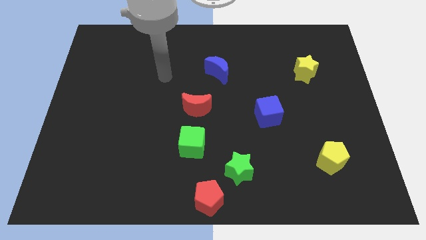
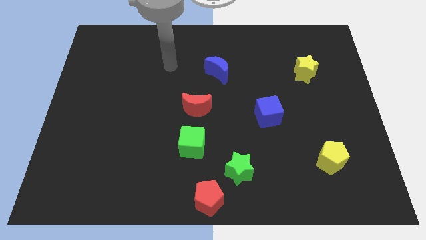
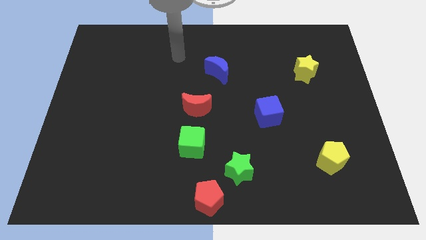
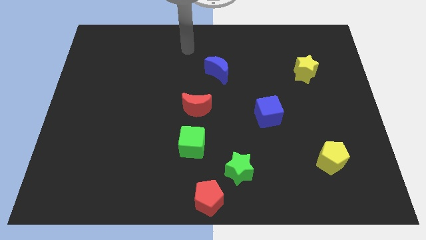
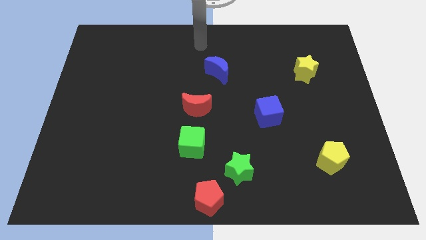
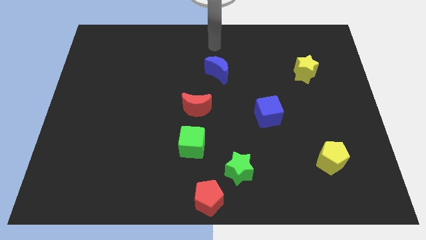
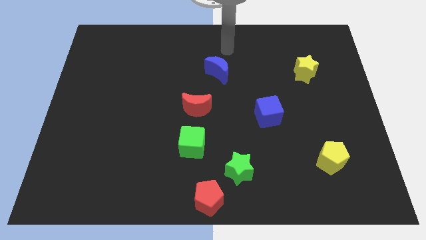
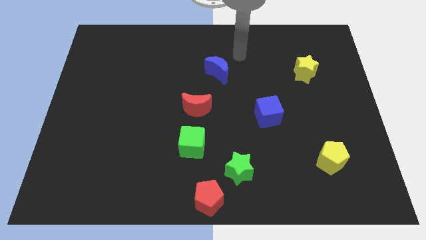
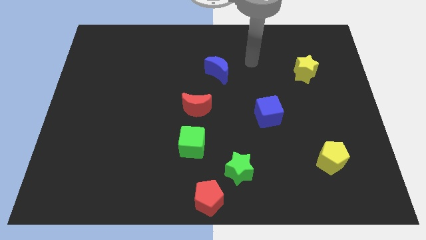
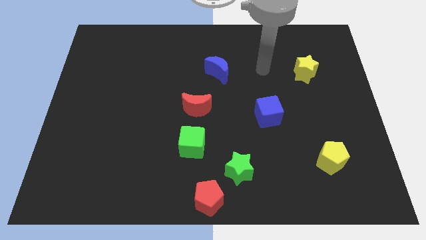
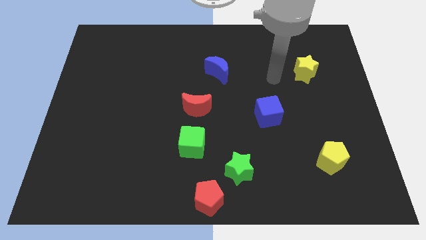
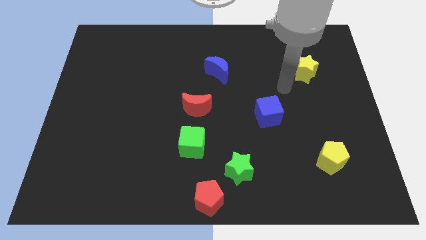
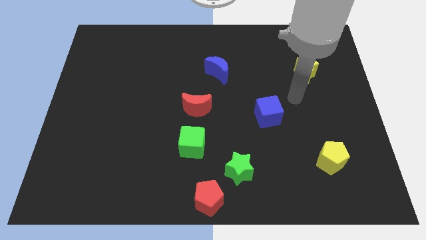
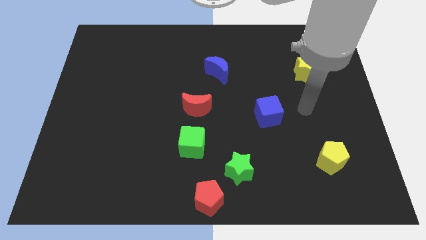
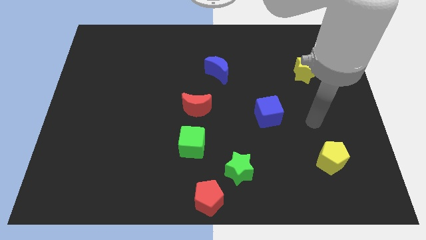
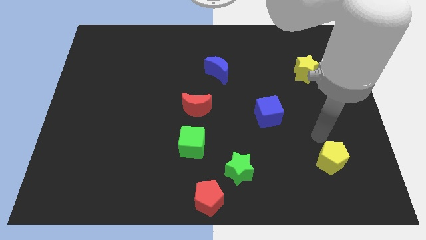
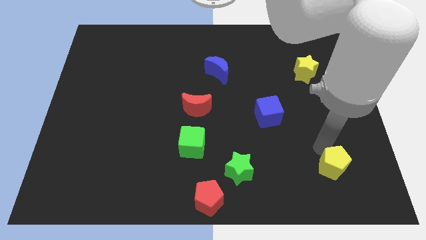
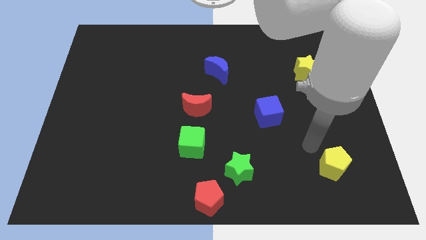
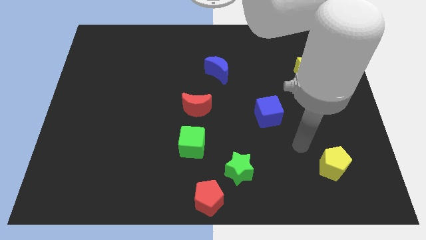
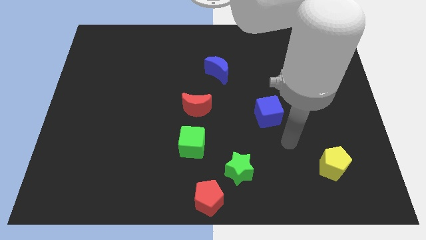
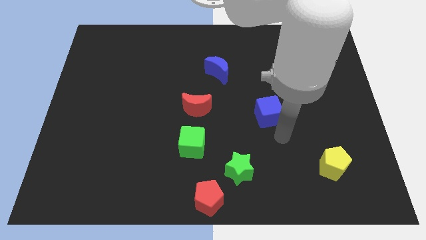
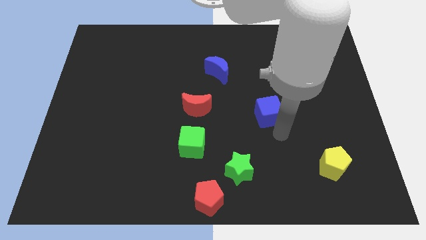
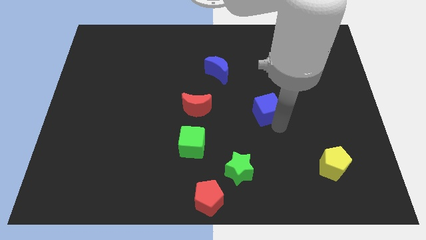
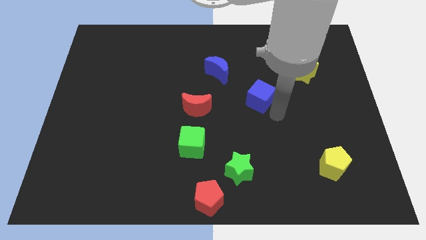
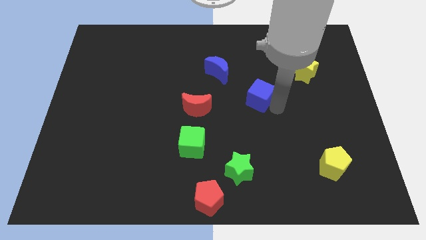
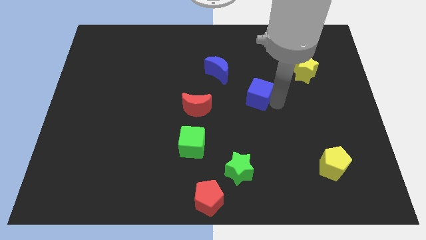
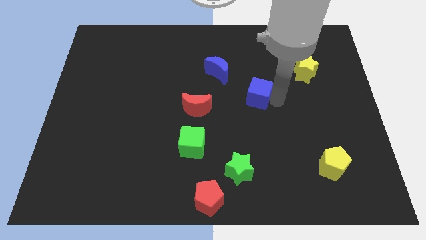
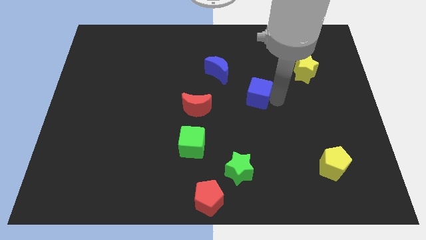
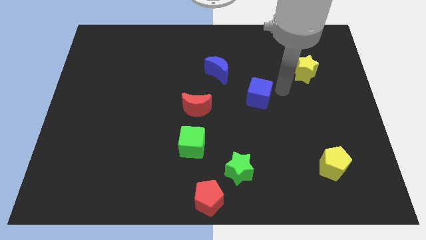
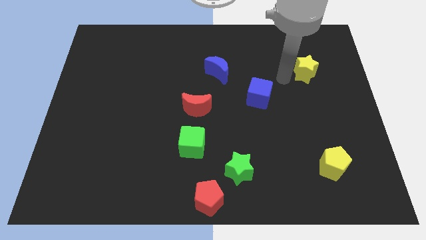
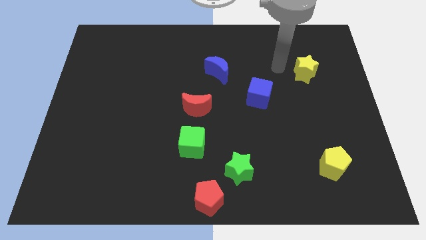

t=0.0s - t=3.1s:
move blue cube up diagonal to yellow star

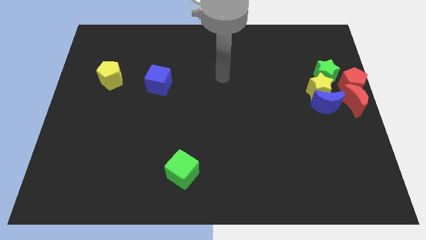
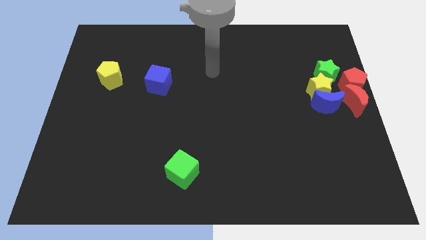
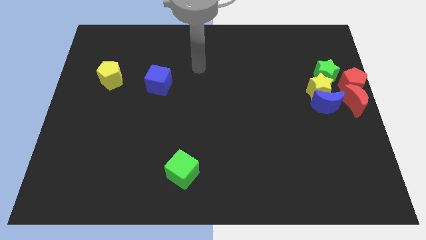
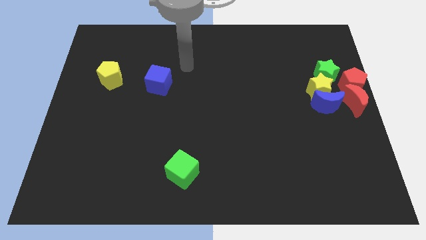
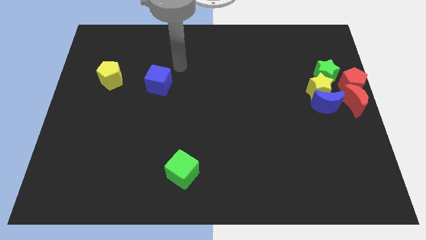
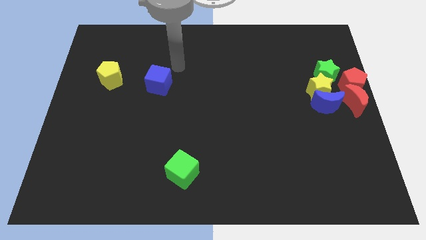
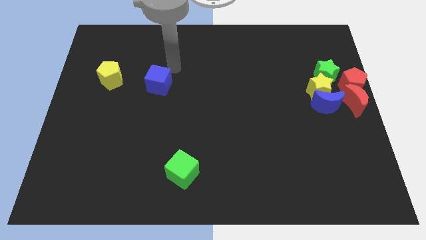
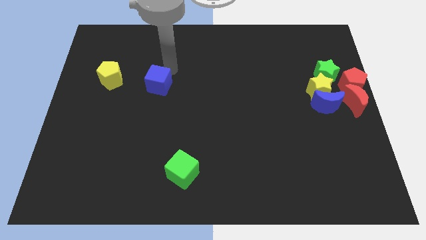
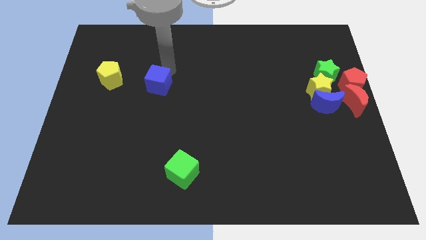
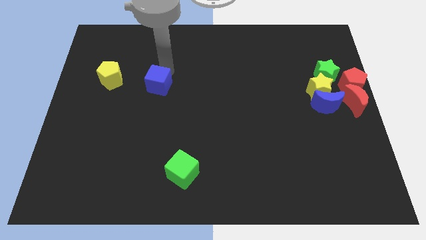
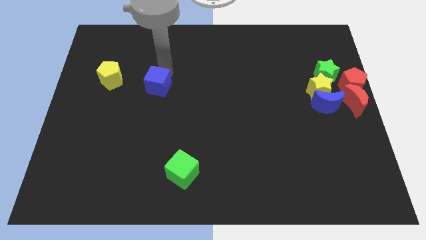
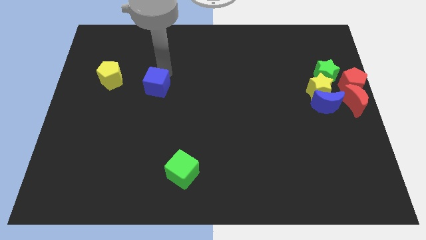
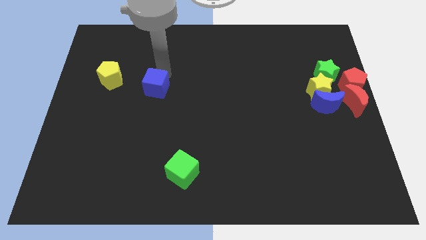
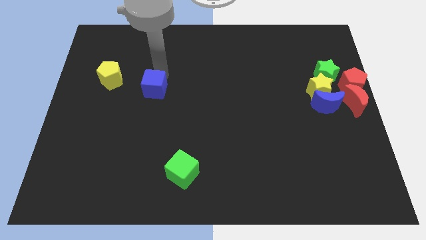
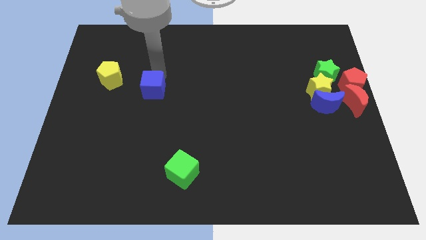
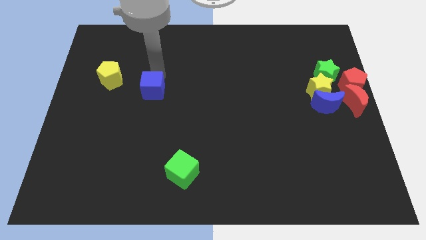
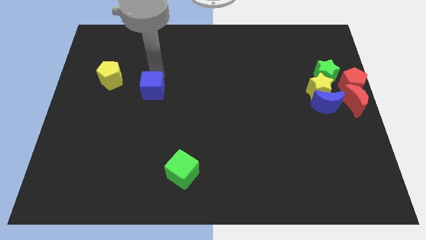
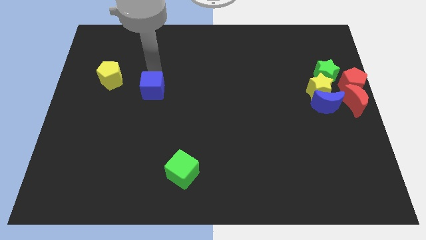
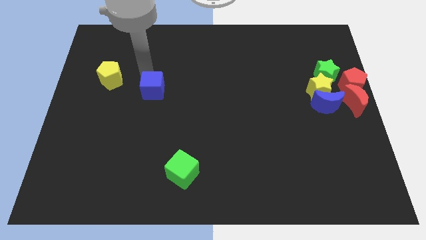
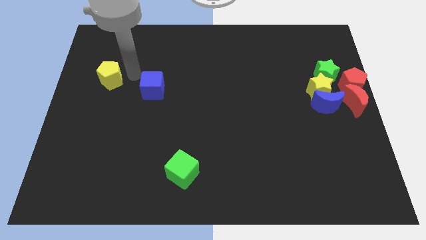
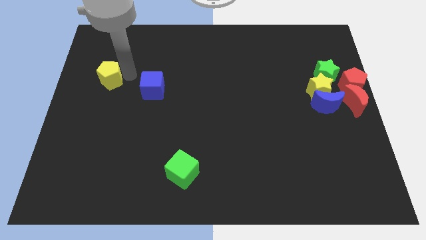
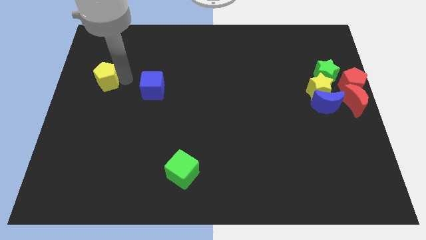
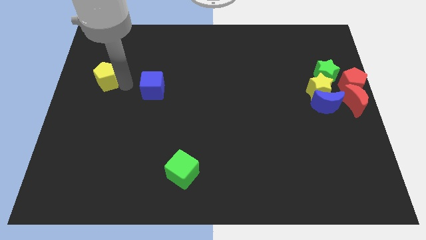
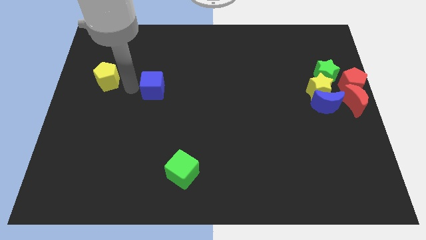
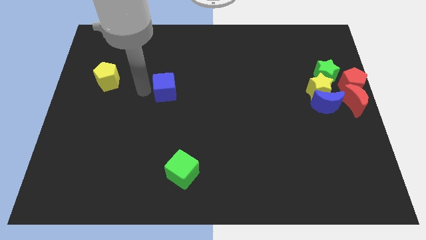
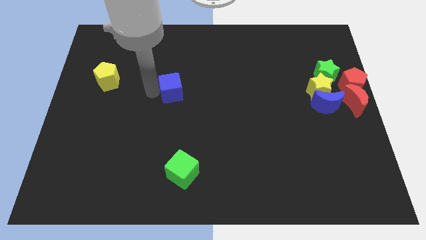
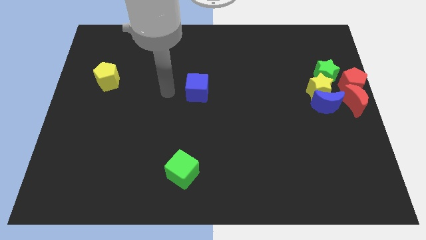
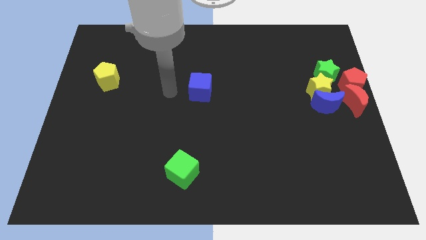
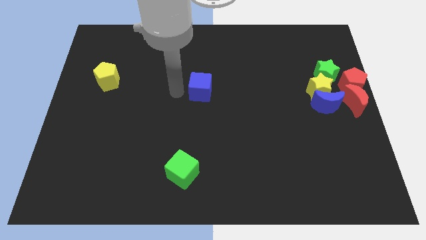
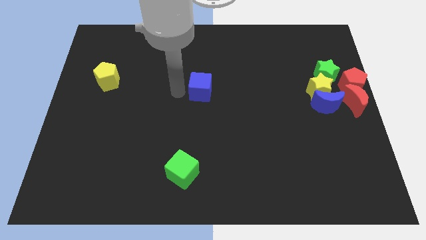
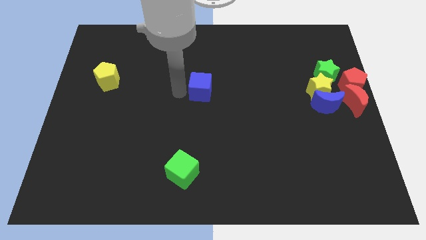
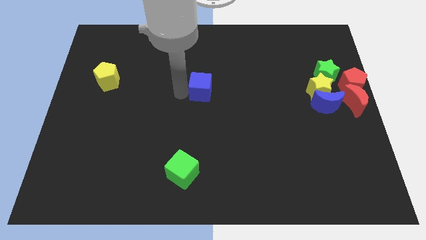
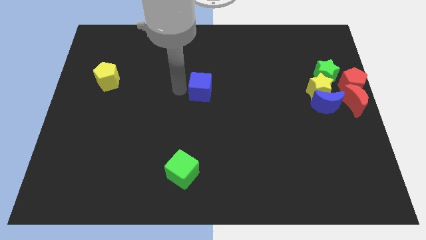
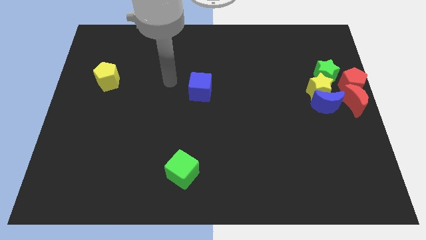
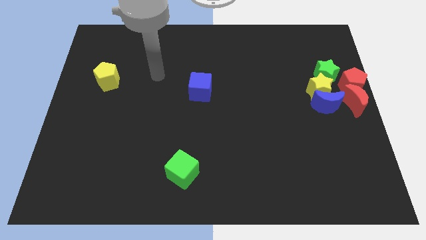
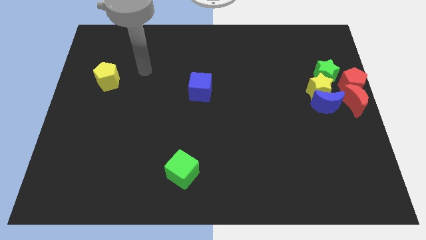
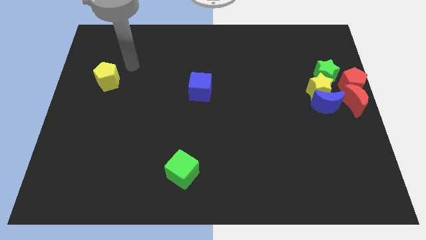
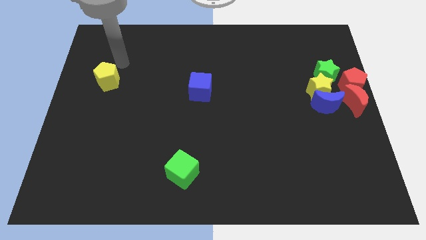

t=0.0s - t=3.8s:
move the blue cube to the center of the board

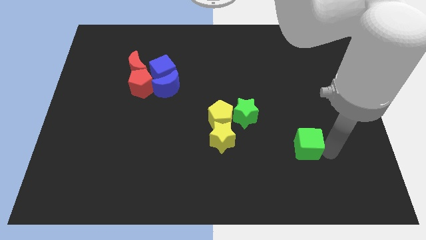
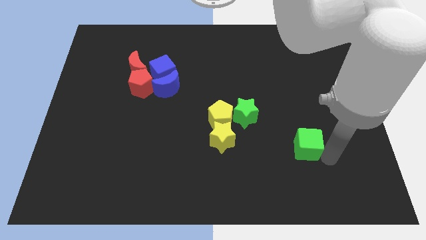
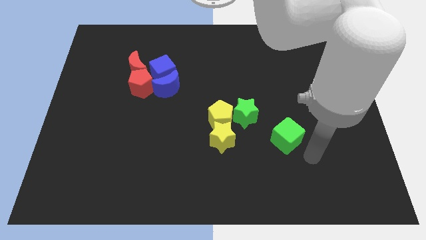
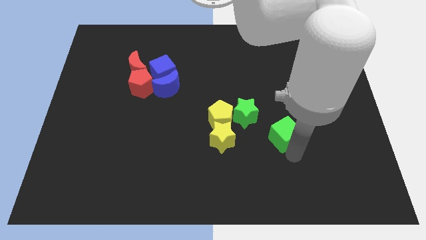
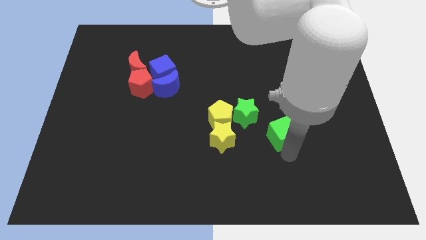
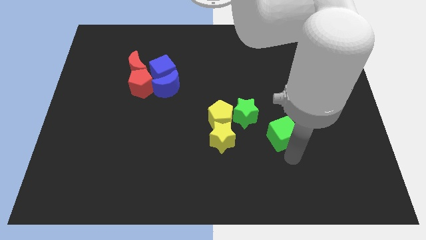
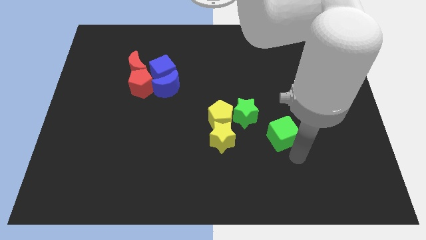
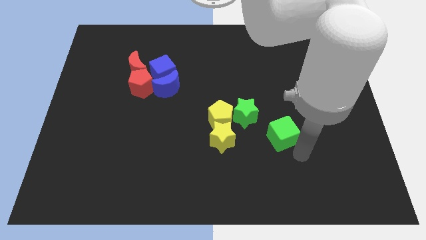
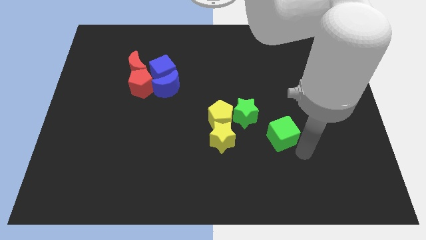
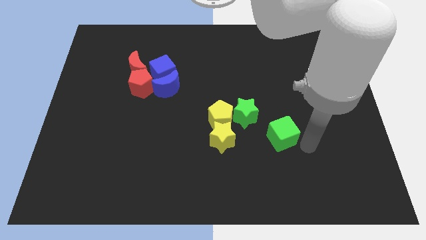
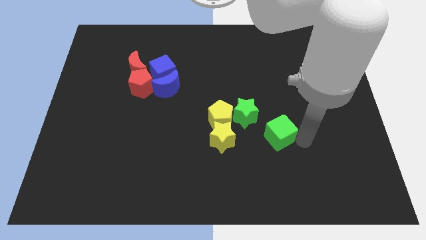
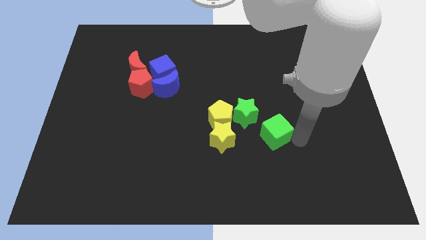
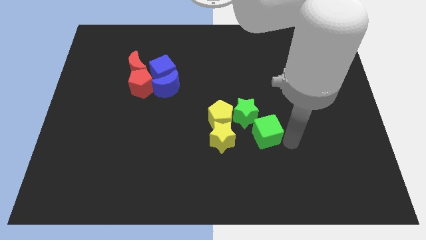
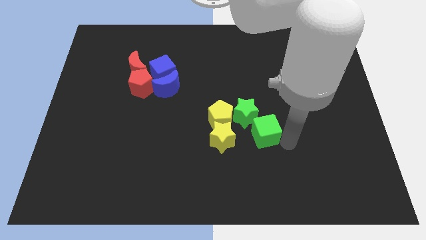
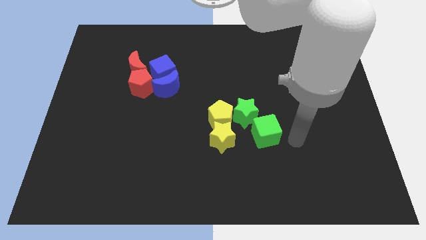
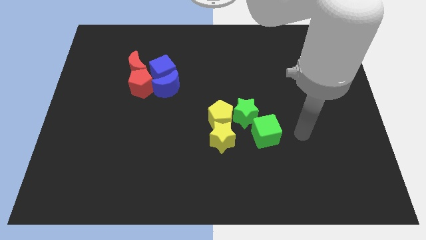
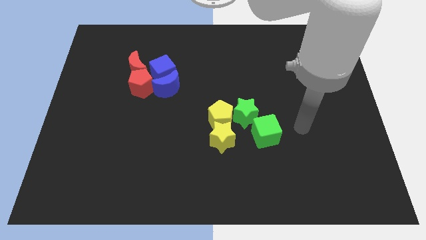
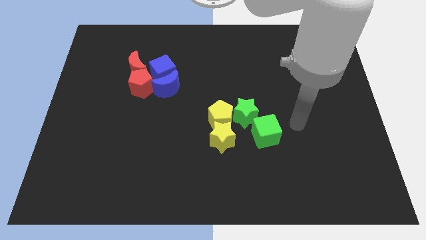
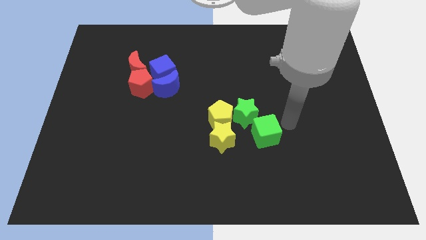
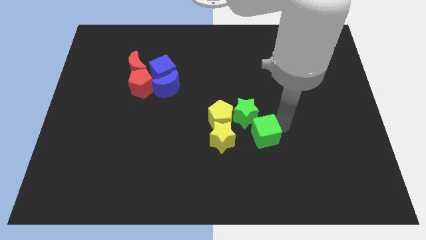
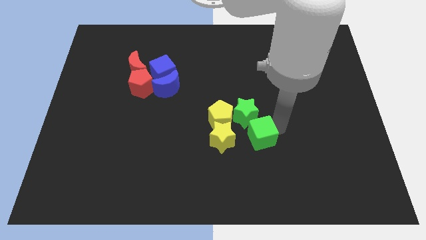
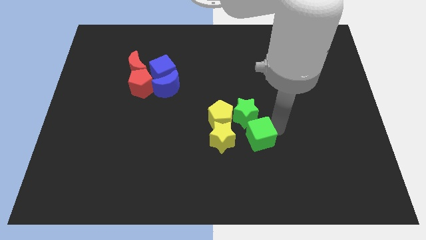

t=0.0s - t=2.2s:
place the green cube parallel to the yellow star
